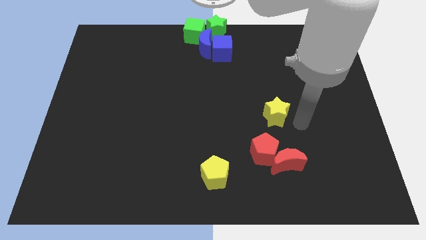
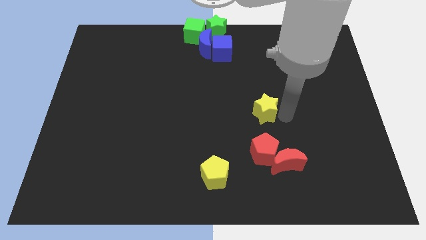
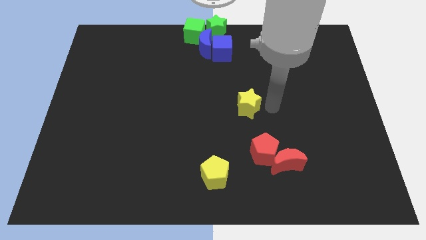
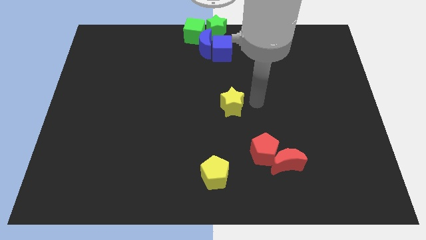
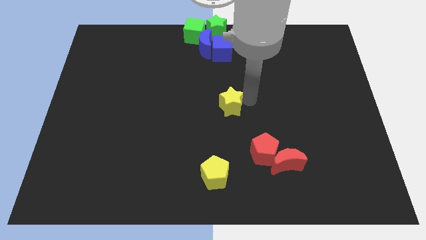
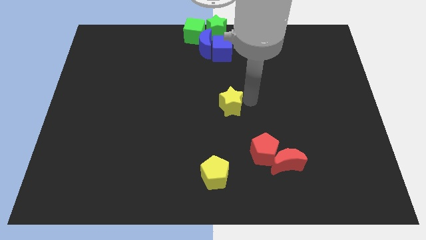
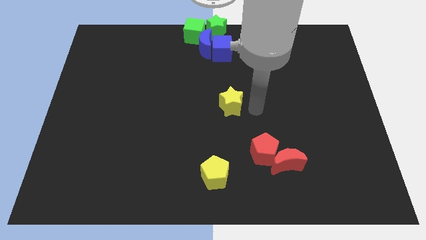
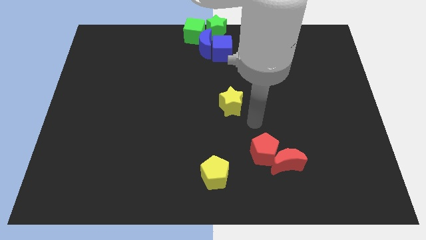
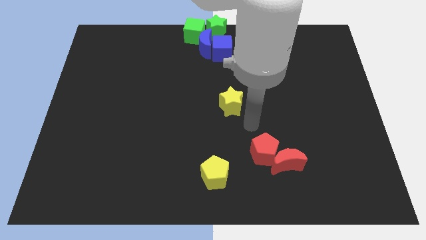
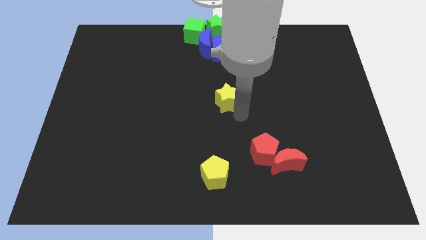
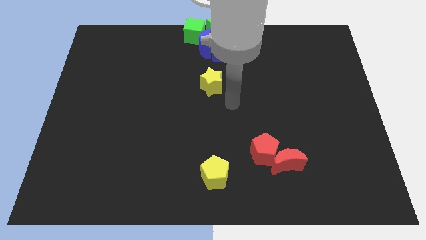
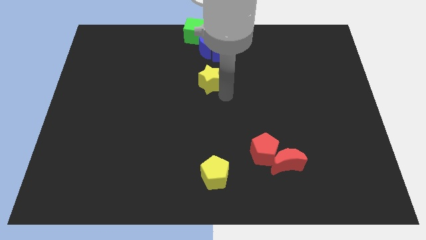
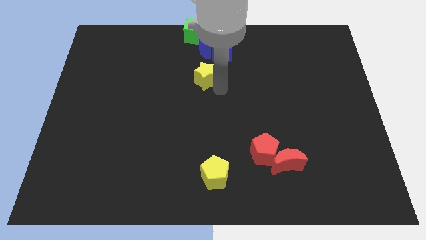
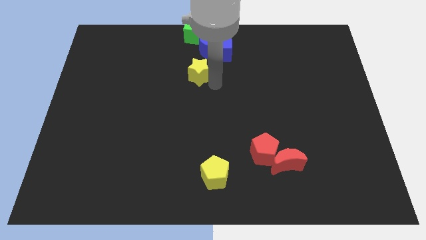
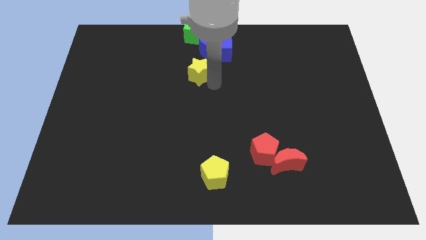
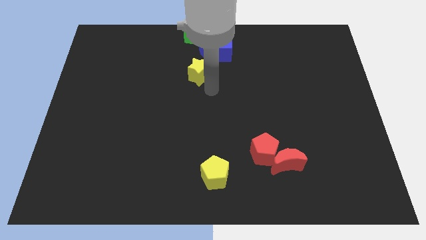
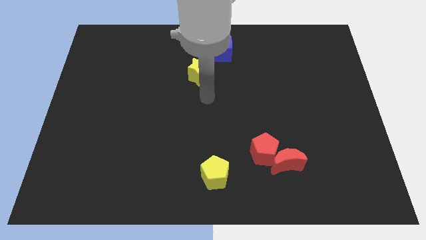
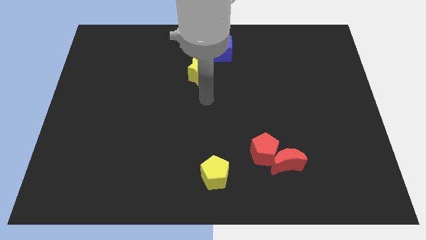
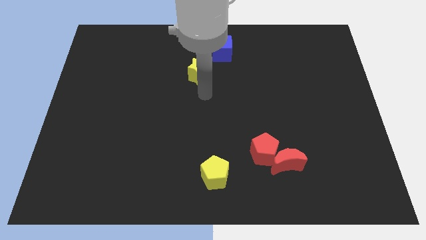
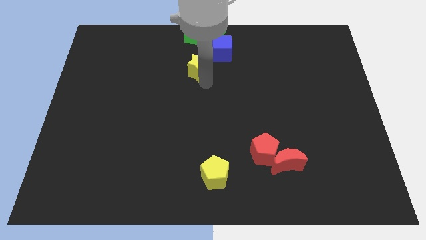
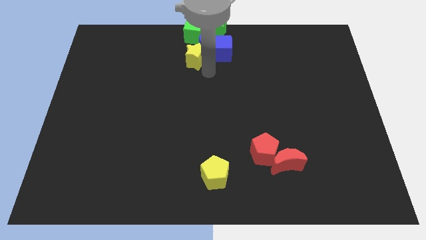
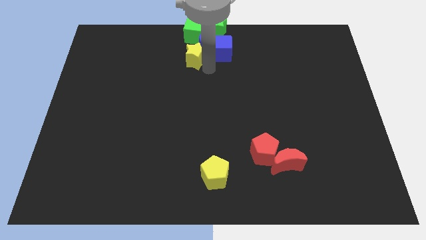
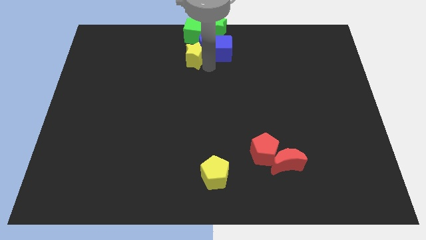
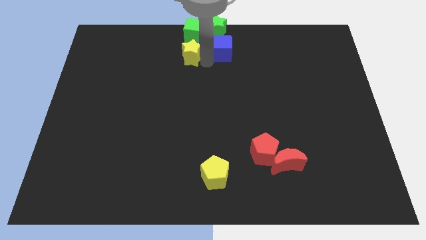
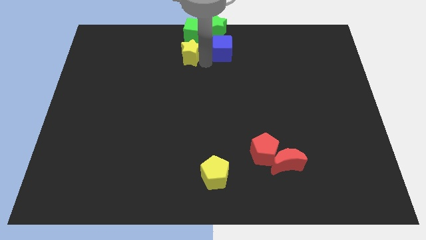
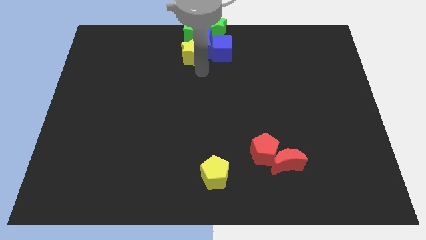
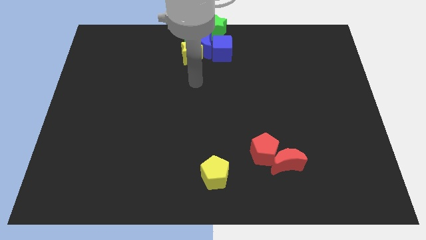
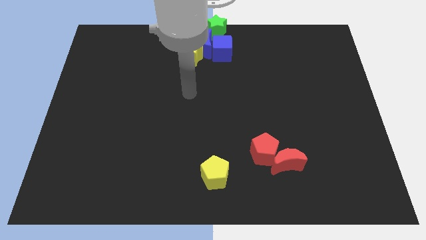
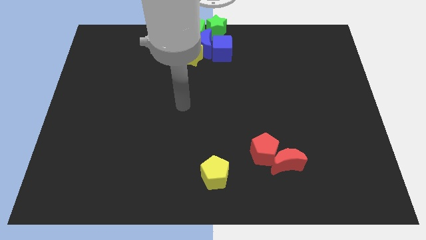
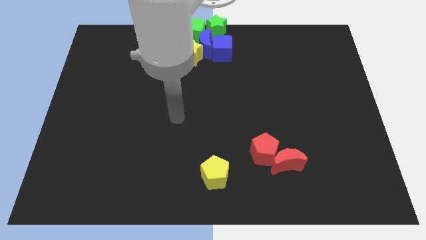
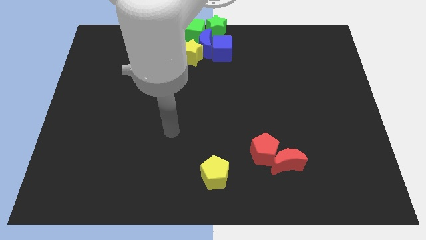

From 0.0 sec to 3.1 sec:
move the yellow star to the left of the blue crescent

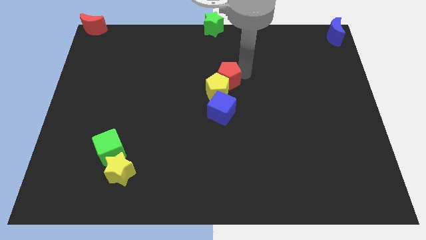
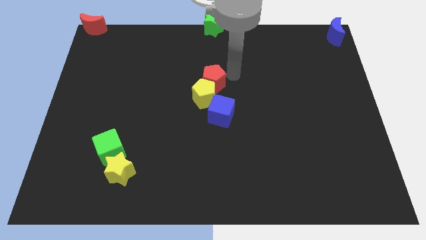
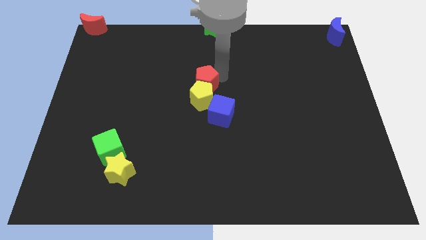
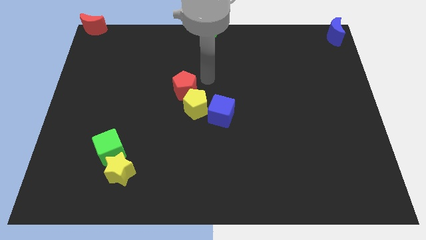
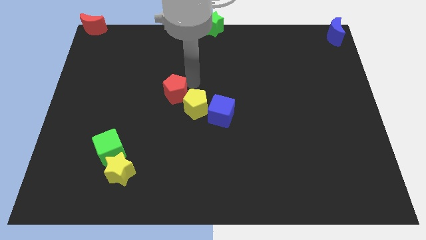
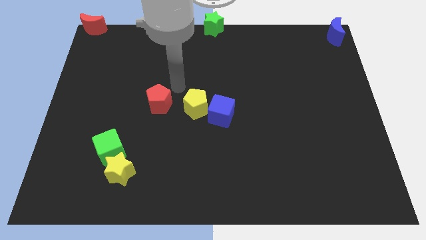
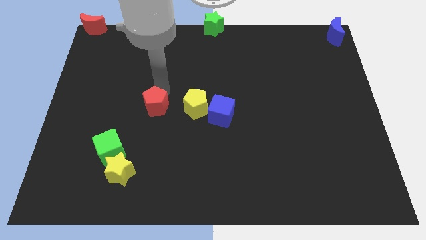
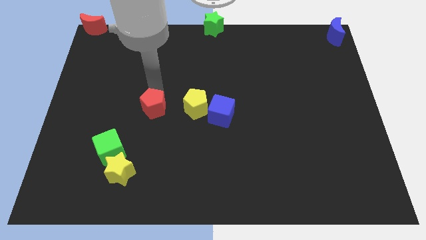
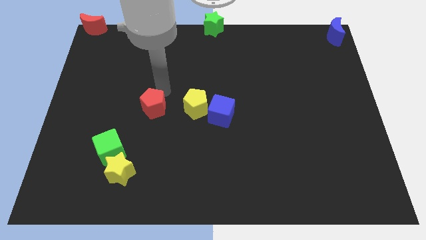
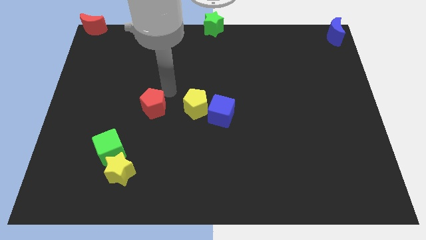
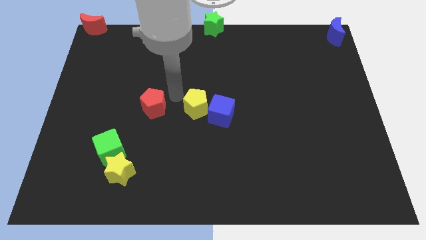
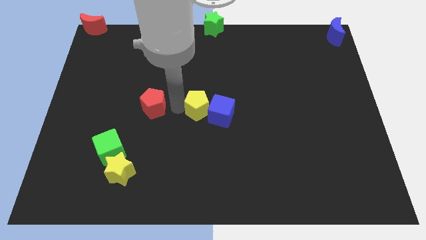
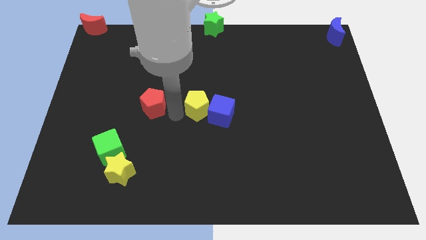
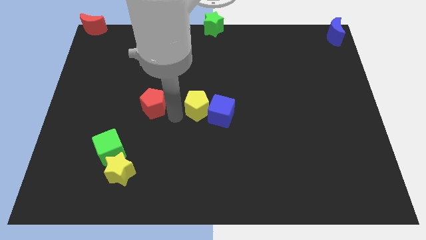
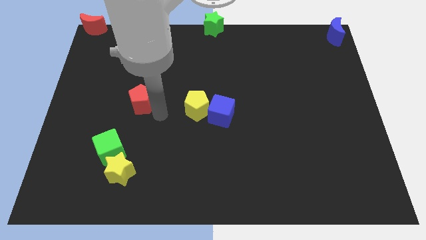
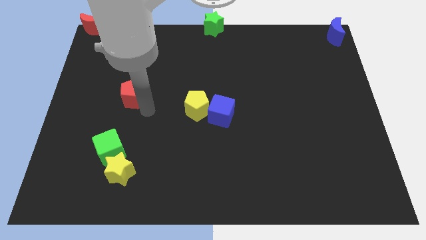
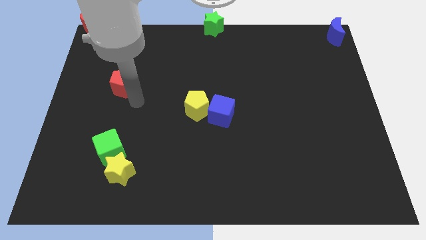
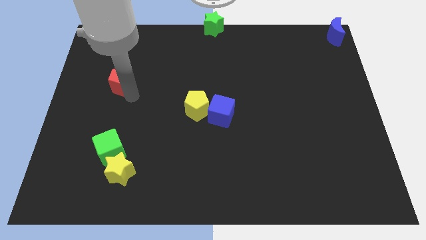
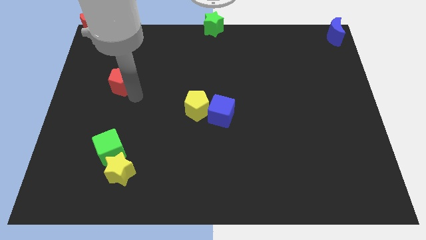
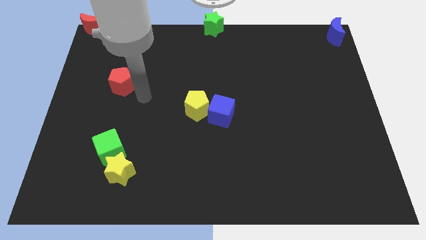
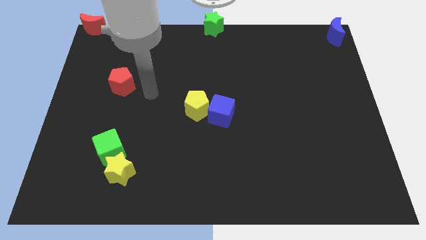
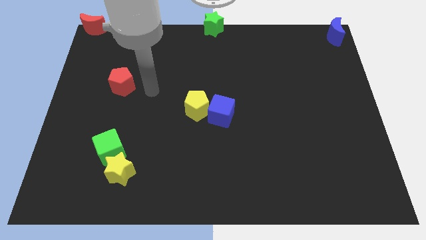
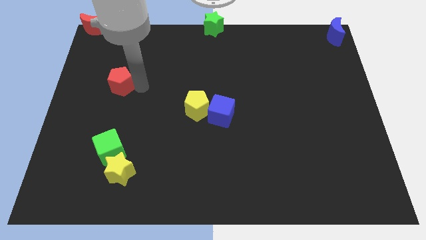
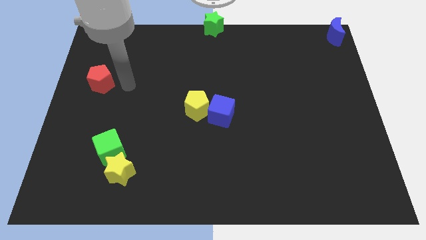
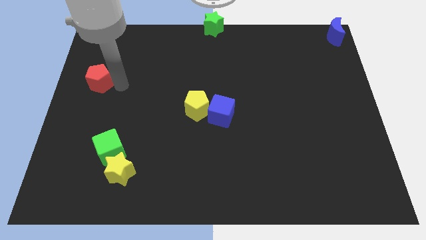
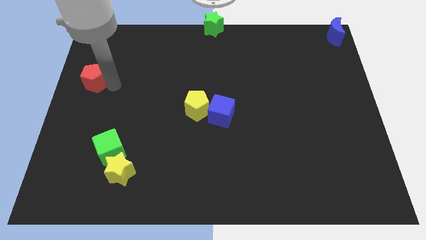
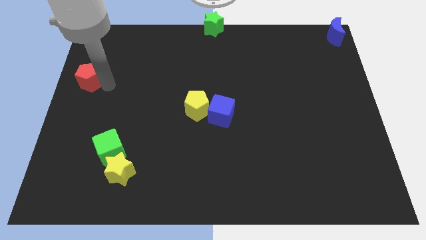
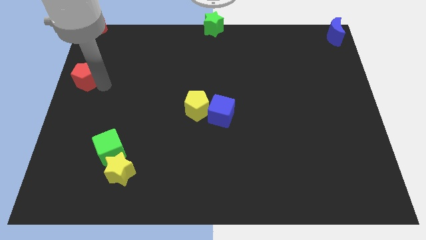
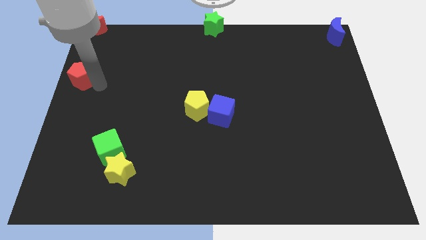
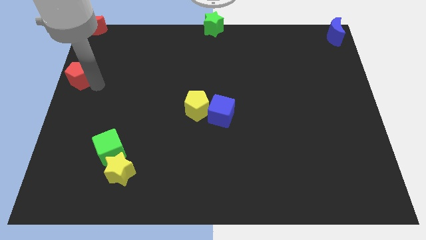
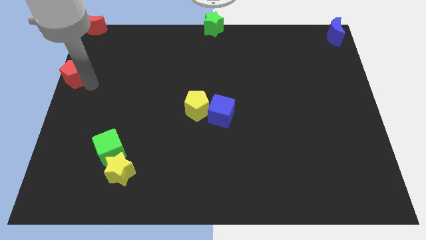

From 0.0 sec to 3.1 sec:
push red pentagon below red crescent

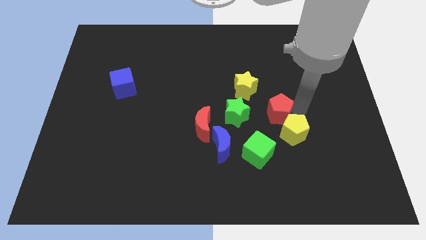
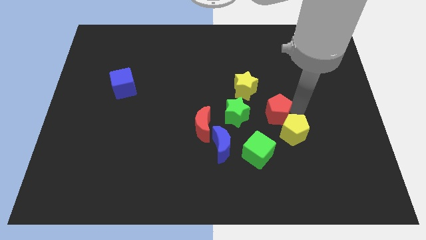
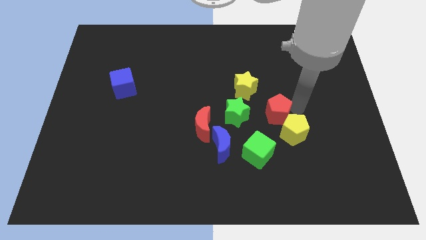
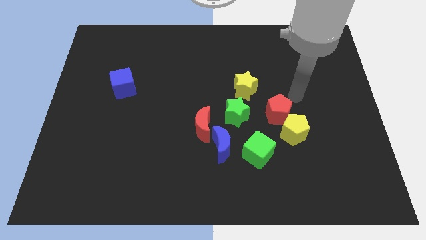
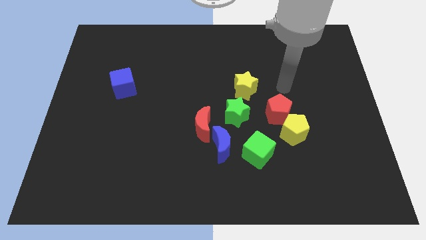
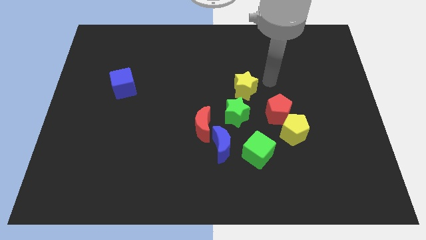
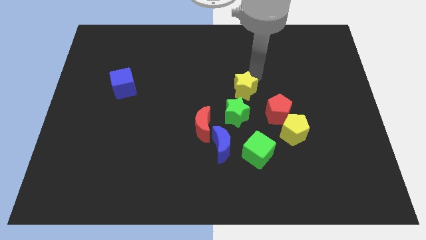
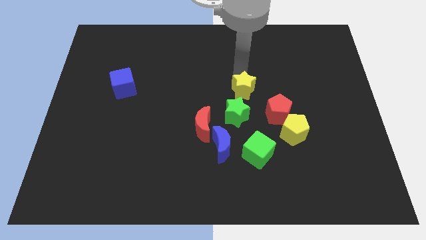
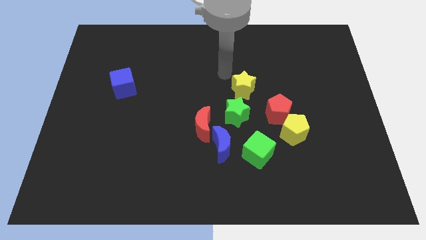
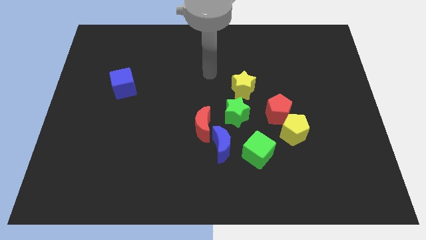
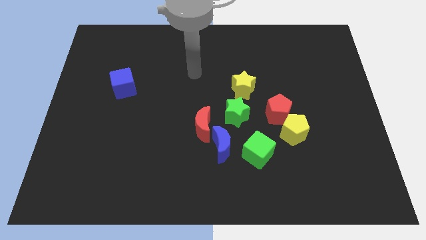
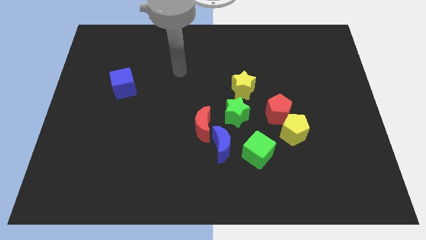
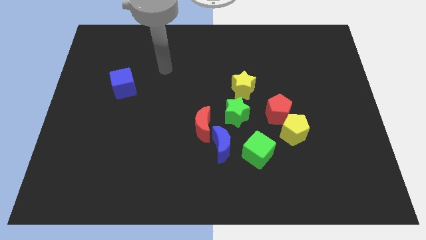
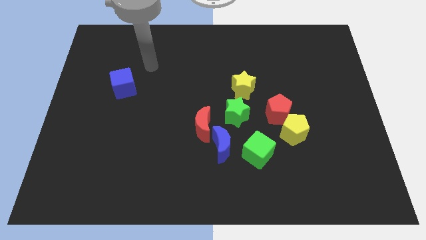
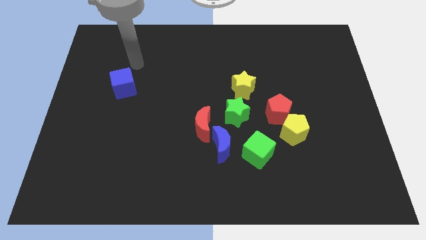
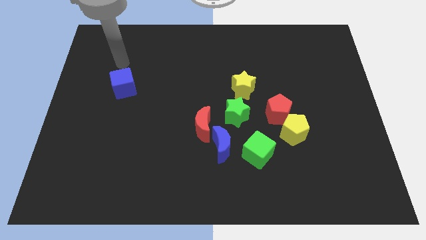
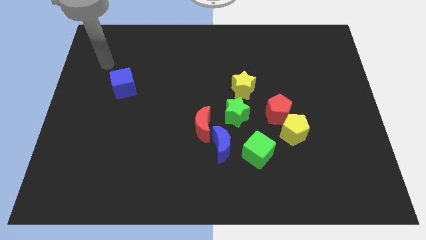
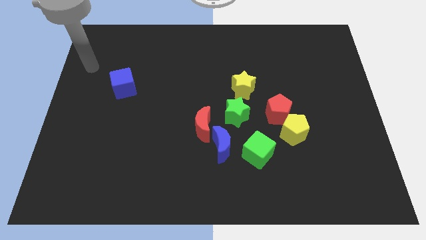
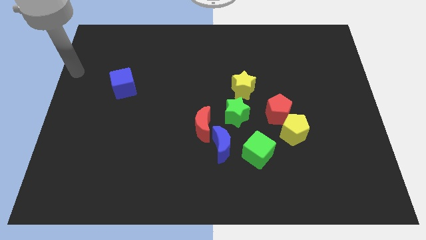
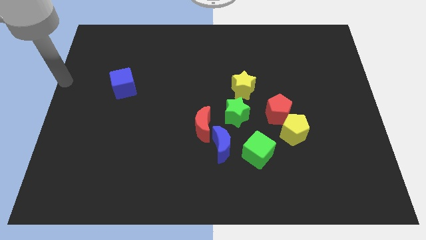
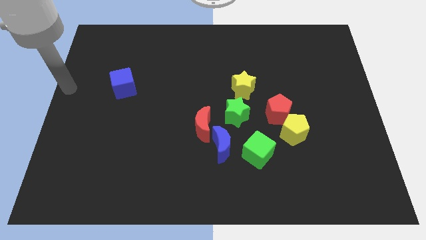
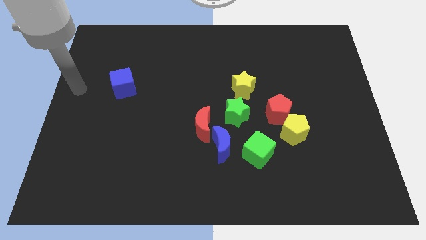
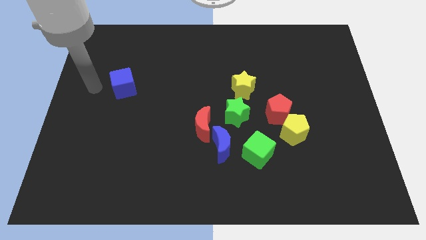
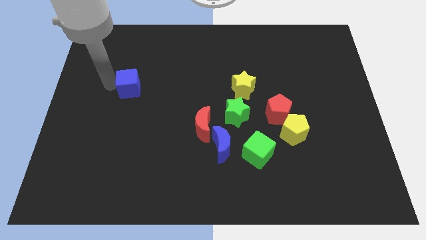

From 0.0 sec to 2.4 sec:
place the arm left to the blue cube

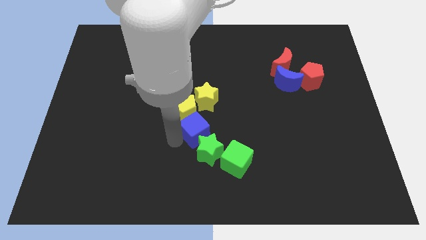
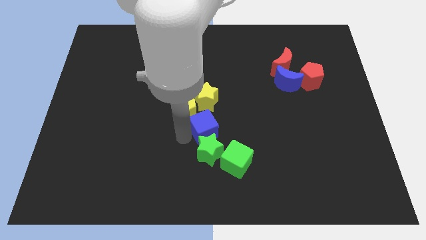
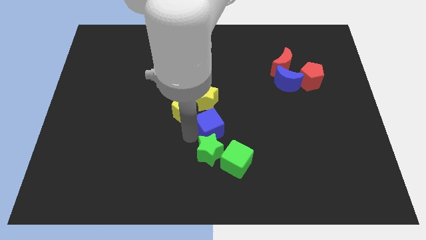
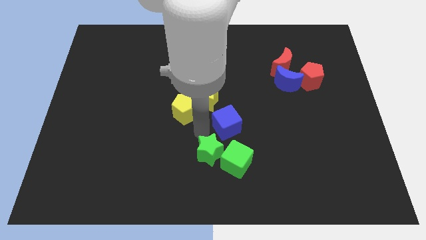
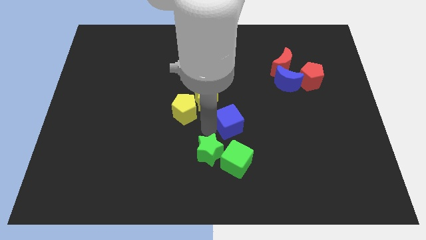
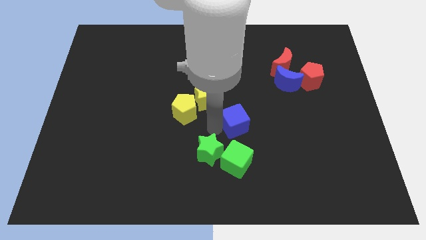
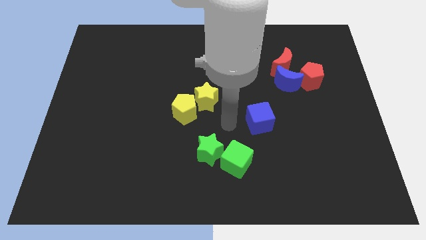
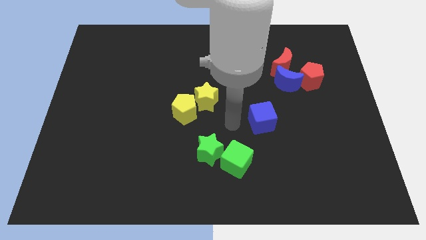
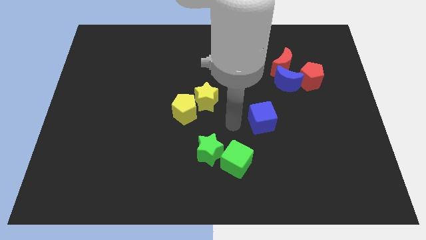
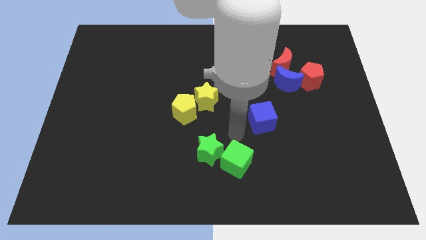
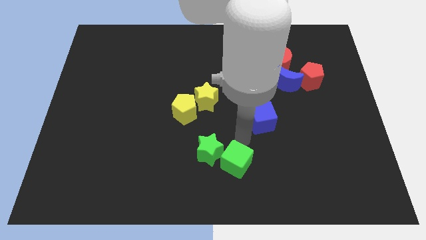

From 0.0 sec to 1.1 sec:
move blue cube away from the yellow pentagon
